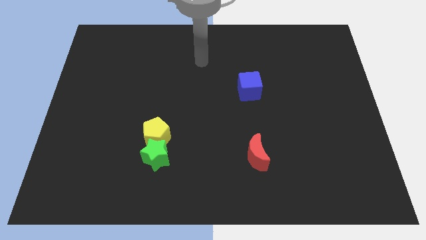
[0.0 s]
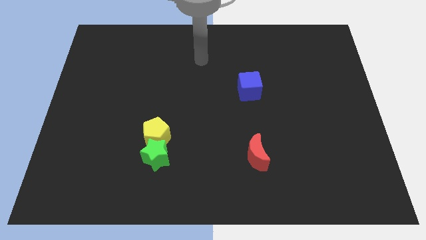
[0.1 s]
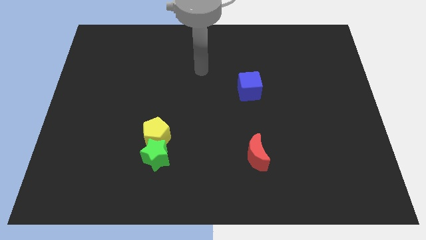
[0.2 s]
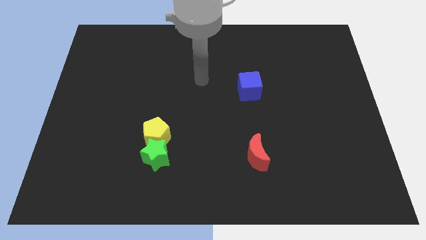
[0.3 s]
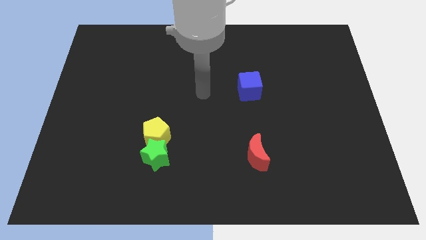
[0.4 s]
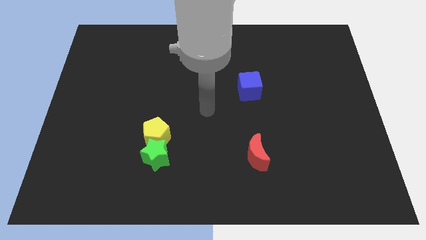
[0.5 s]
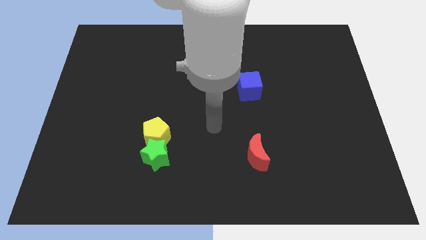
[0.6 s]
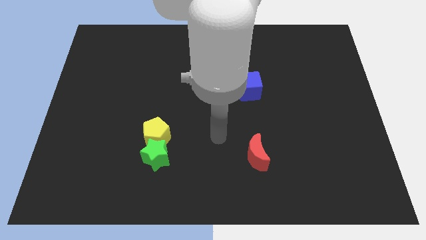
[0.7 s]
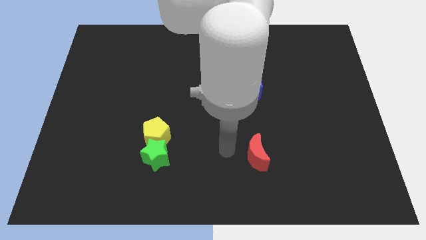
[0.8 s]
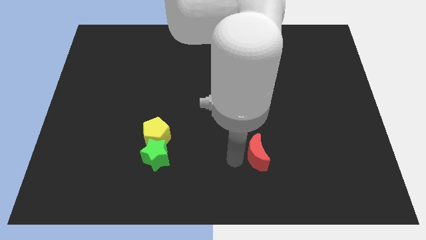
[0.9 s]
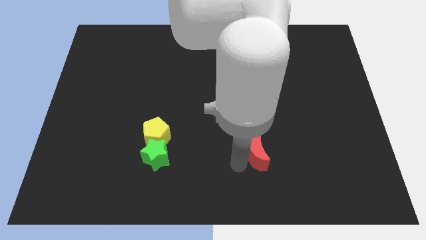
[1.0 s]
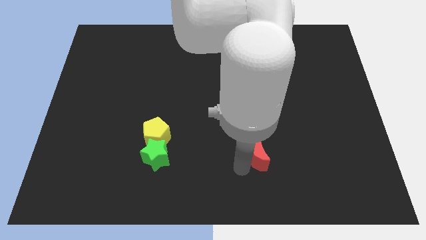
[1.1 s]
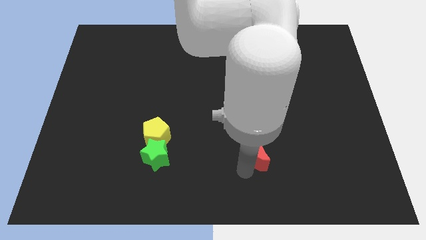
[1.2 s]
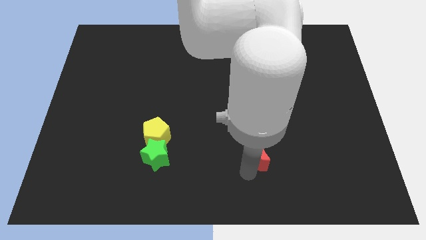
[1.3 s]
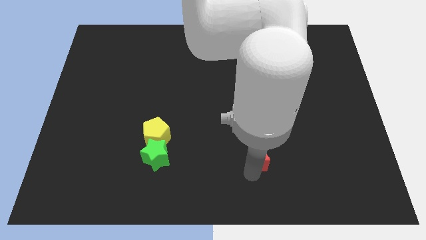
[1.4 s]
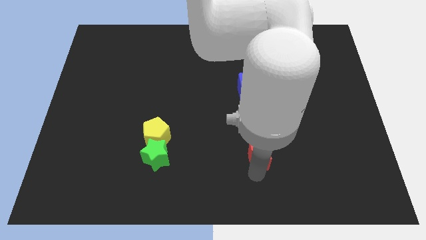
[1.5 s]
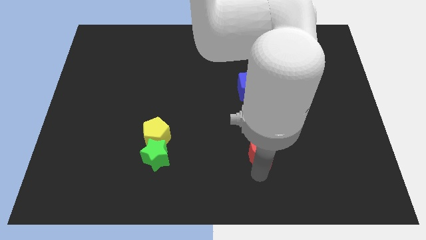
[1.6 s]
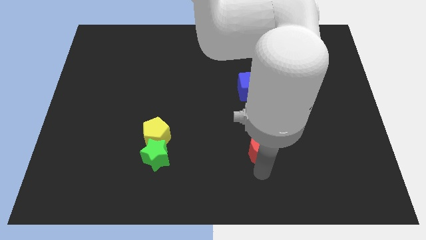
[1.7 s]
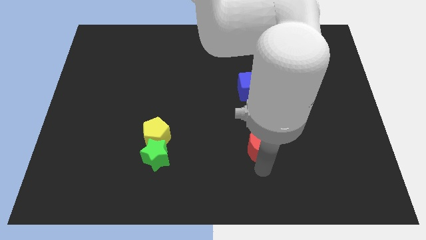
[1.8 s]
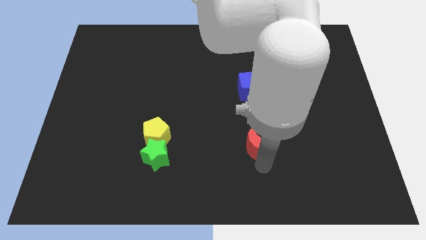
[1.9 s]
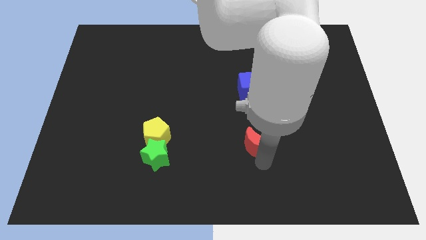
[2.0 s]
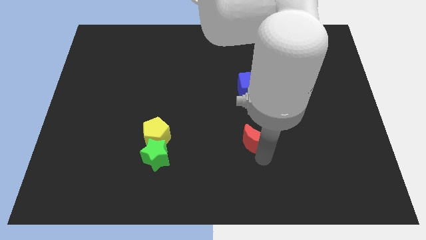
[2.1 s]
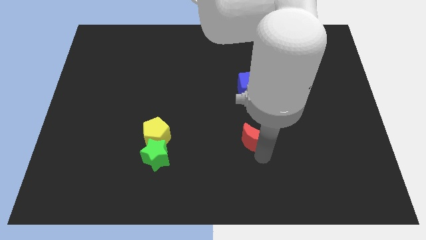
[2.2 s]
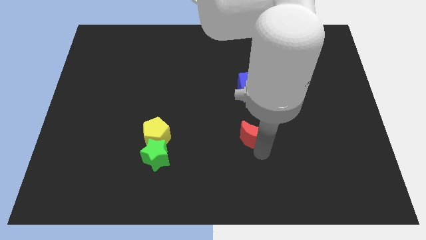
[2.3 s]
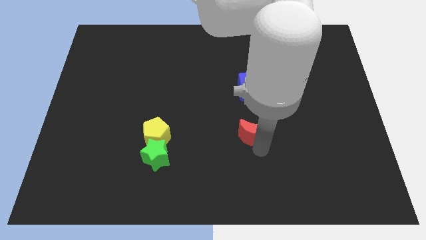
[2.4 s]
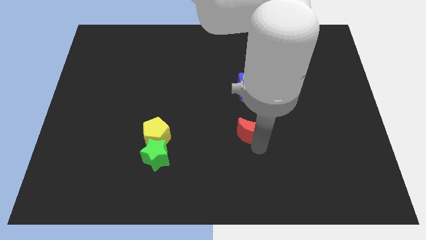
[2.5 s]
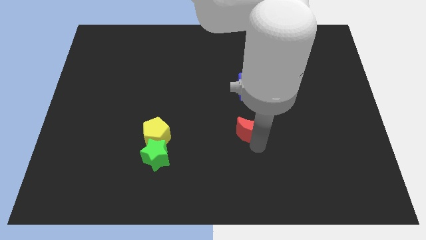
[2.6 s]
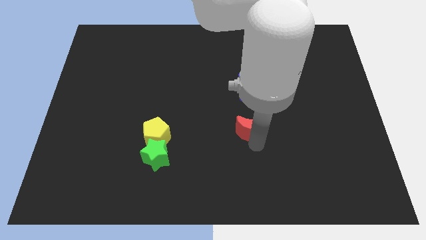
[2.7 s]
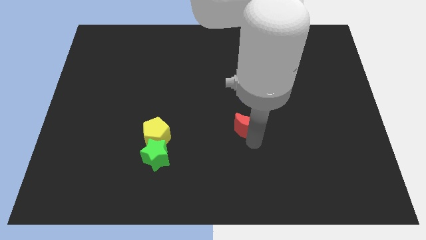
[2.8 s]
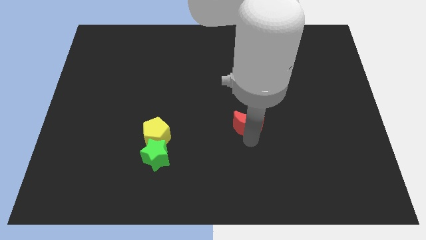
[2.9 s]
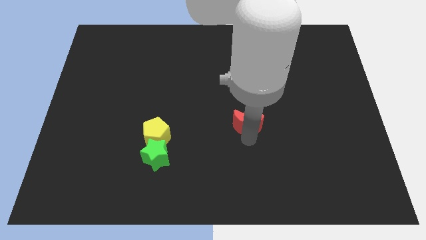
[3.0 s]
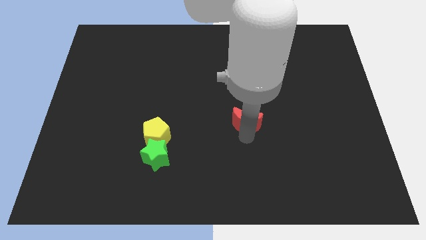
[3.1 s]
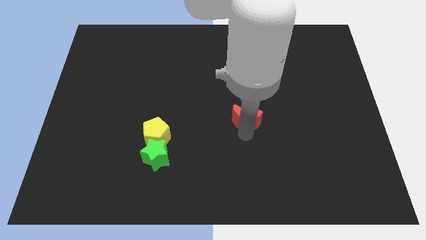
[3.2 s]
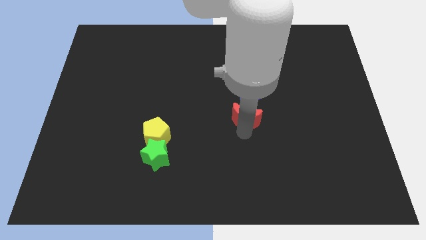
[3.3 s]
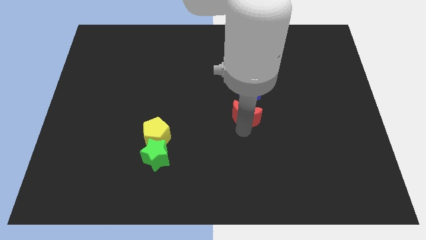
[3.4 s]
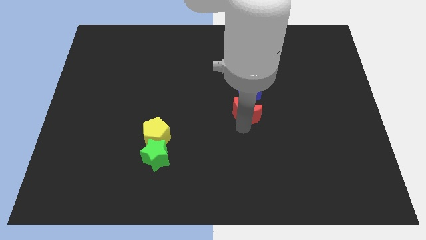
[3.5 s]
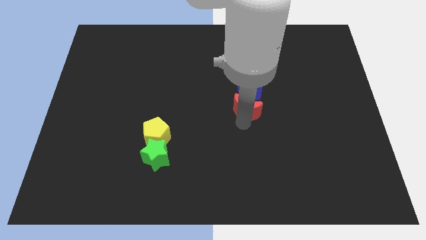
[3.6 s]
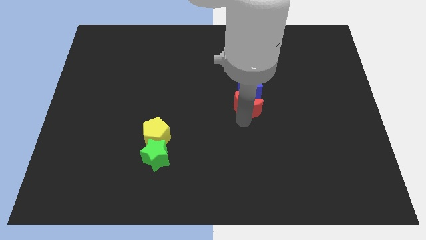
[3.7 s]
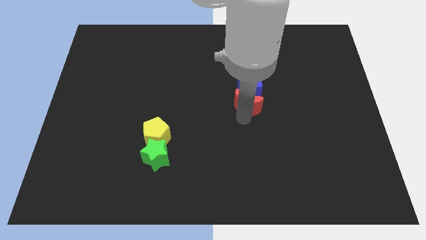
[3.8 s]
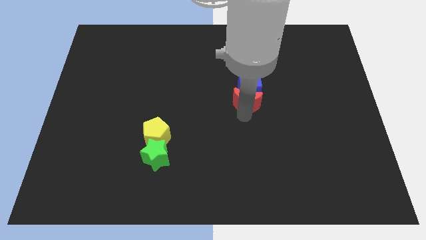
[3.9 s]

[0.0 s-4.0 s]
slide the red moon next to the blue cube

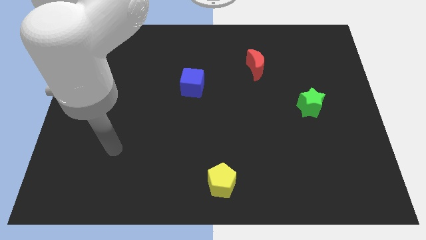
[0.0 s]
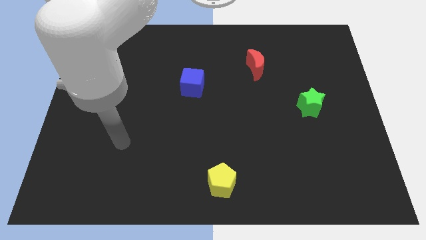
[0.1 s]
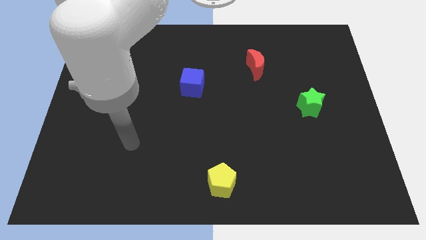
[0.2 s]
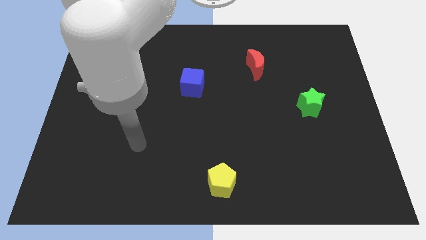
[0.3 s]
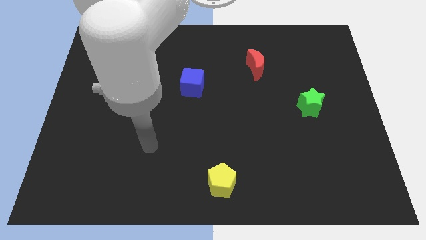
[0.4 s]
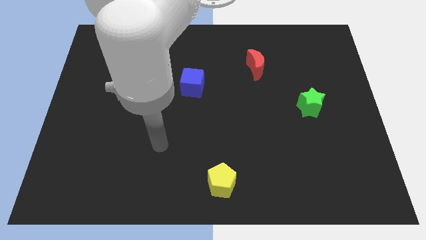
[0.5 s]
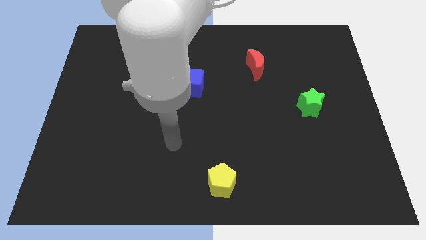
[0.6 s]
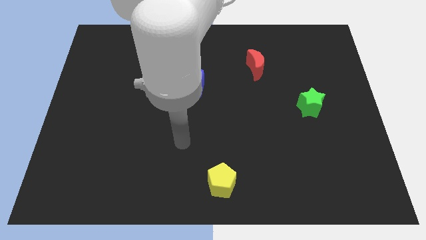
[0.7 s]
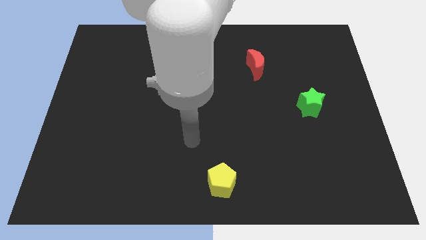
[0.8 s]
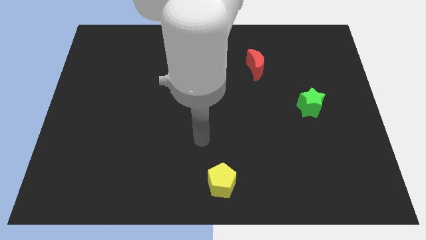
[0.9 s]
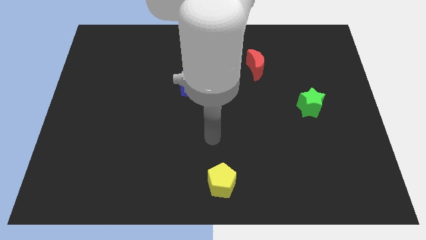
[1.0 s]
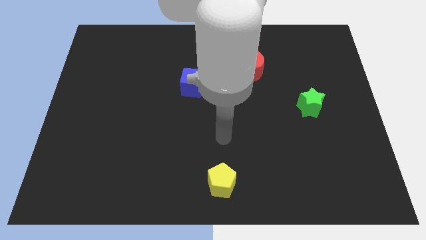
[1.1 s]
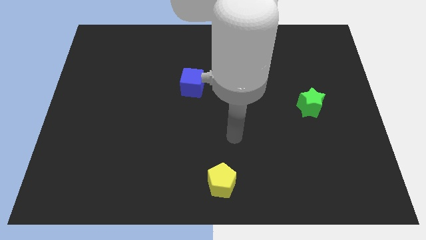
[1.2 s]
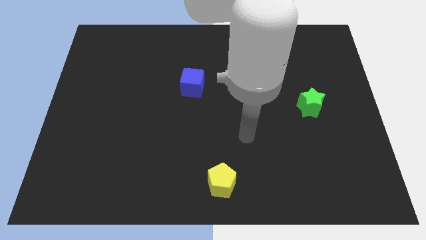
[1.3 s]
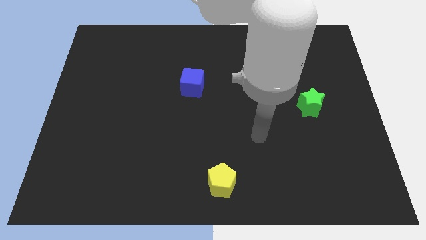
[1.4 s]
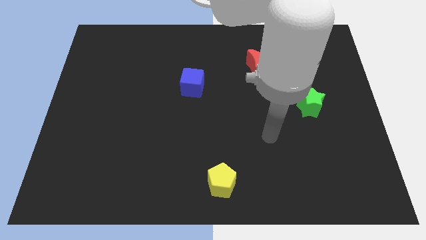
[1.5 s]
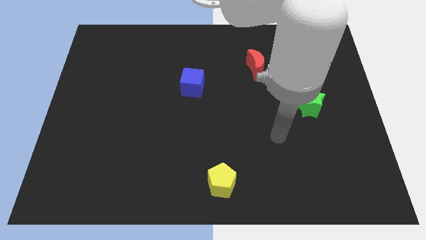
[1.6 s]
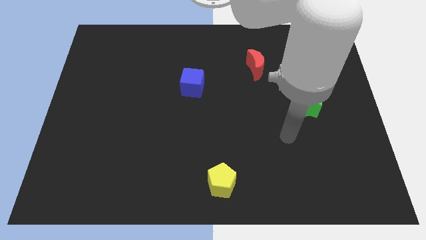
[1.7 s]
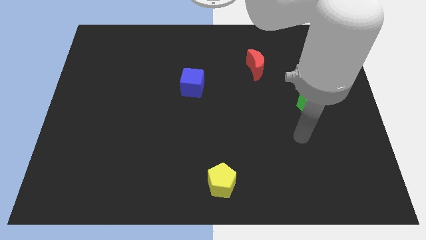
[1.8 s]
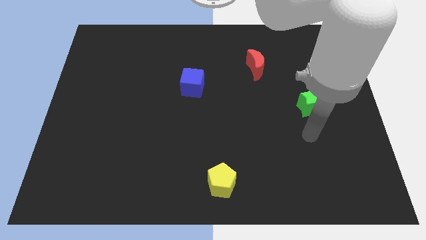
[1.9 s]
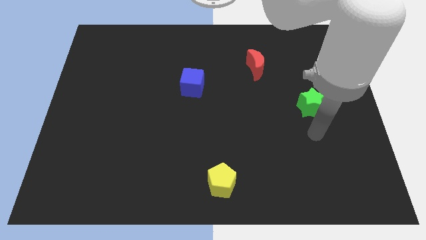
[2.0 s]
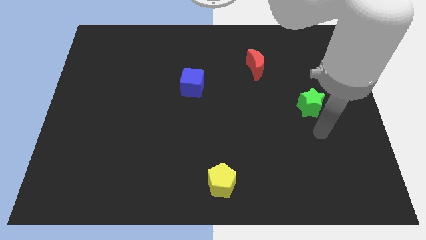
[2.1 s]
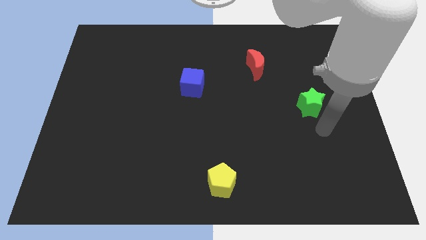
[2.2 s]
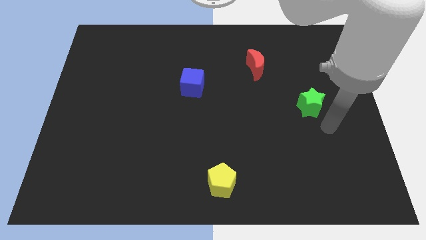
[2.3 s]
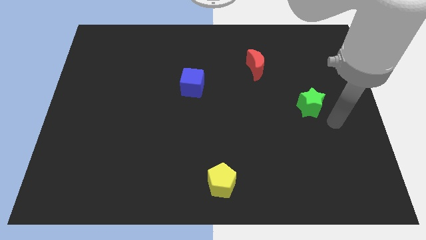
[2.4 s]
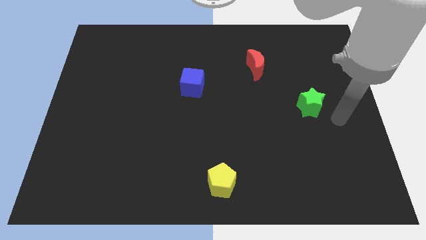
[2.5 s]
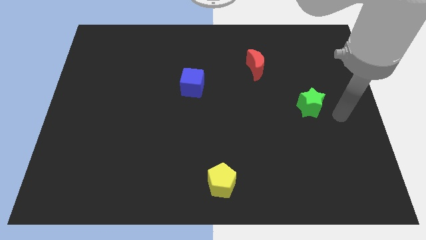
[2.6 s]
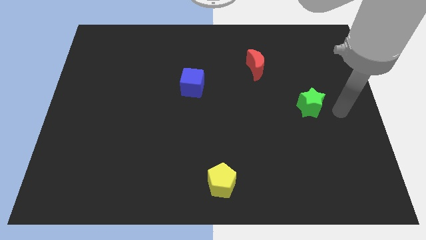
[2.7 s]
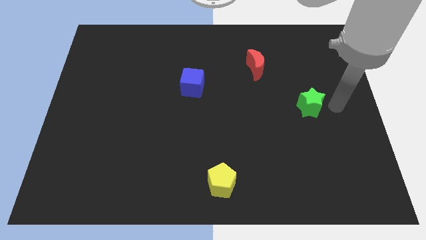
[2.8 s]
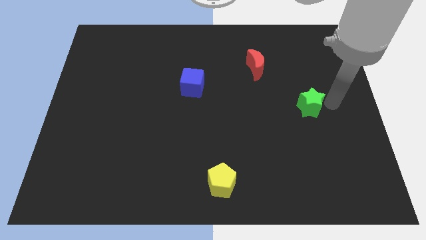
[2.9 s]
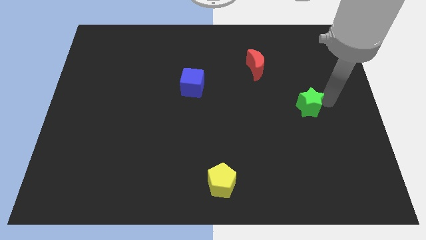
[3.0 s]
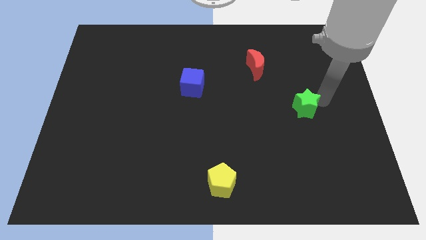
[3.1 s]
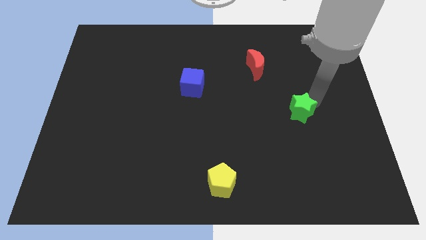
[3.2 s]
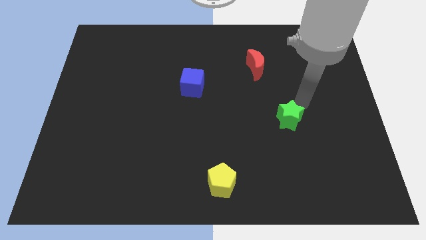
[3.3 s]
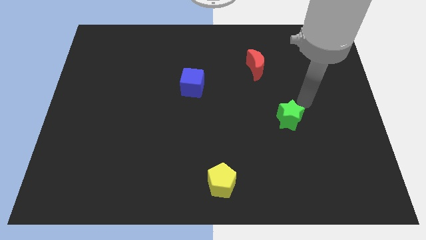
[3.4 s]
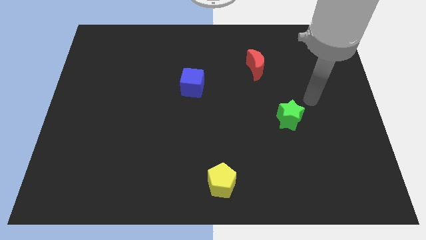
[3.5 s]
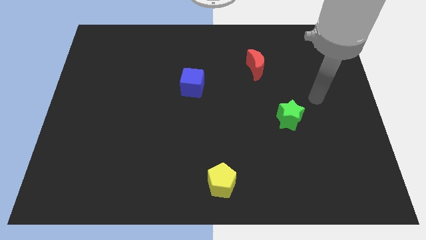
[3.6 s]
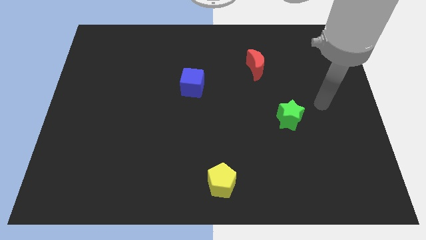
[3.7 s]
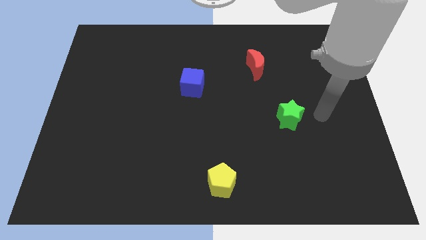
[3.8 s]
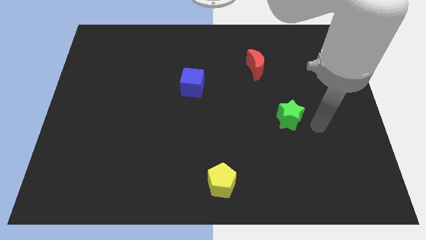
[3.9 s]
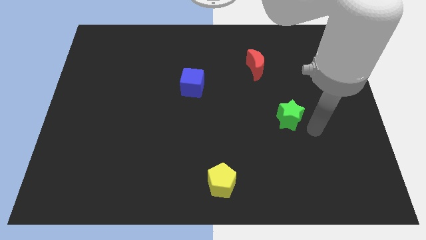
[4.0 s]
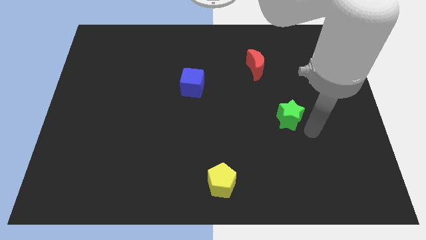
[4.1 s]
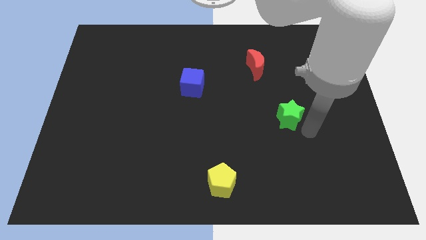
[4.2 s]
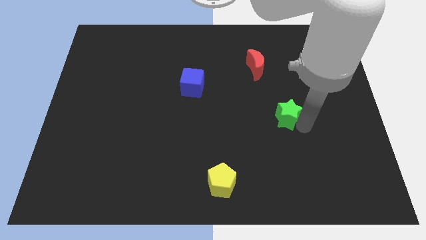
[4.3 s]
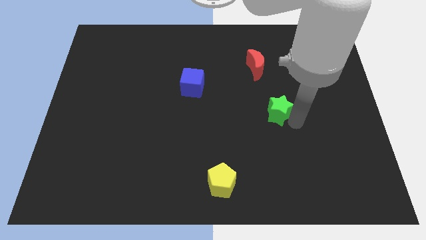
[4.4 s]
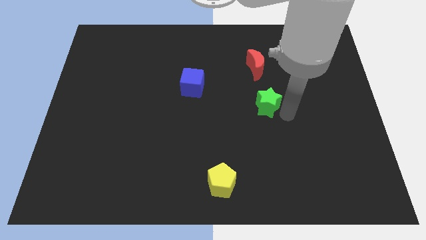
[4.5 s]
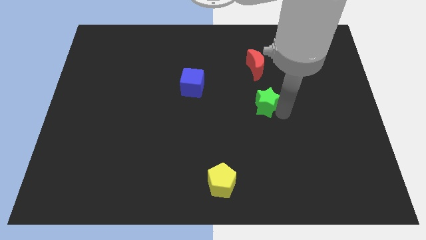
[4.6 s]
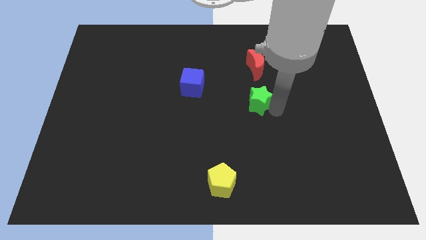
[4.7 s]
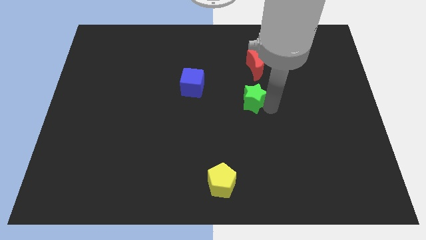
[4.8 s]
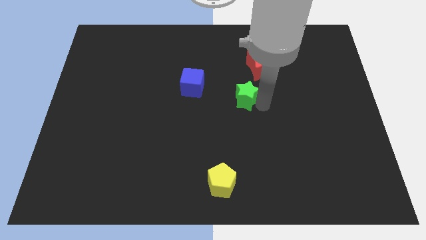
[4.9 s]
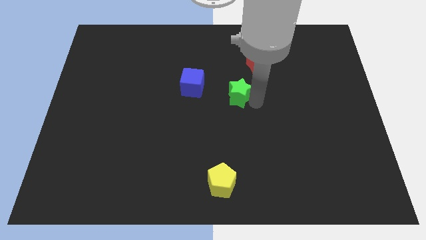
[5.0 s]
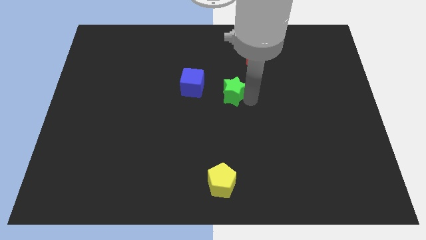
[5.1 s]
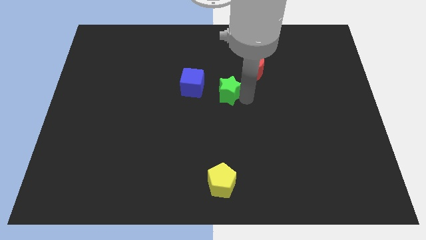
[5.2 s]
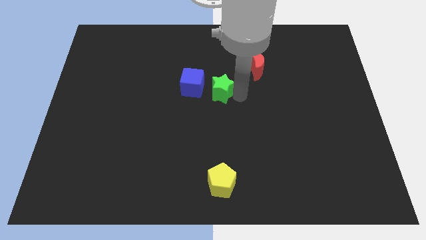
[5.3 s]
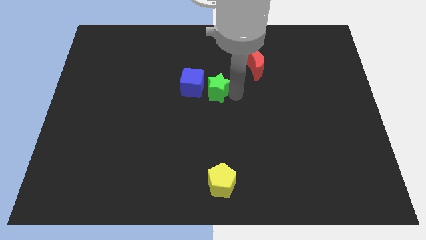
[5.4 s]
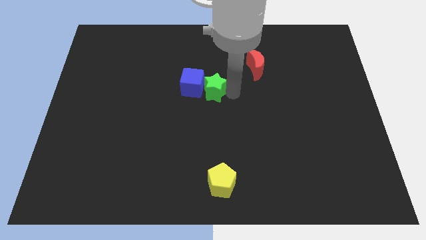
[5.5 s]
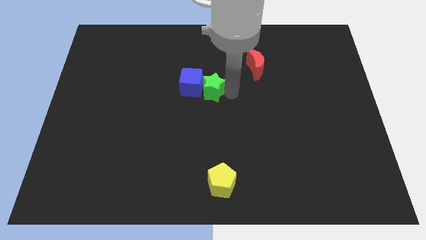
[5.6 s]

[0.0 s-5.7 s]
move the green star close to the blue block
